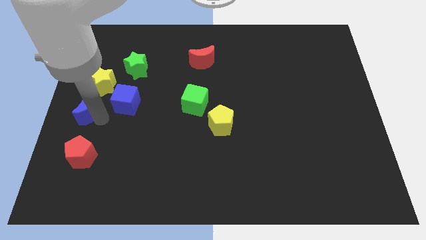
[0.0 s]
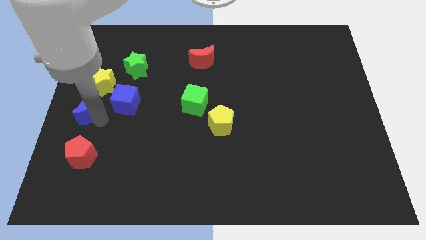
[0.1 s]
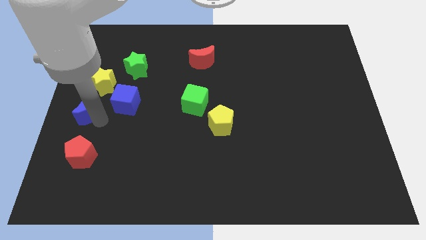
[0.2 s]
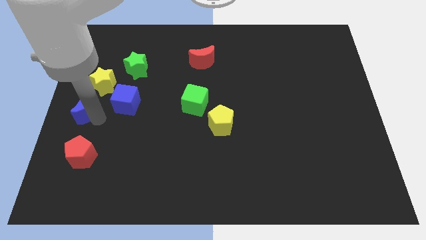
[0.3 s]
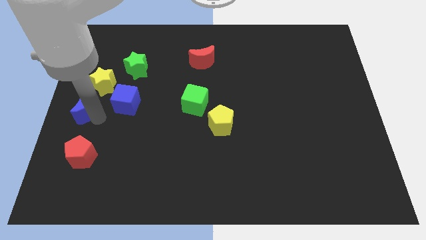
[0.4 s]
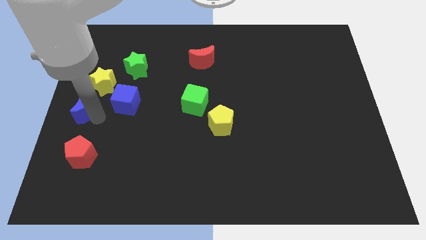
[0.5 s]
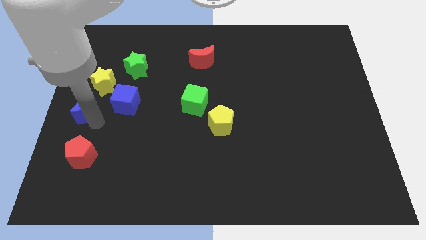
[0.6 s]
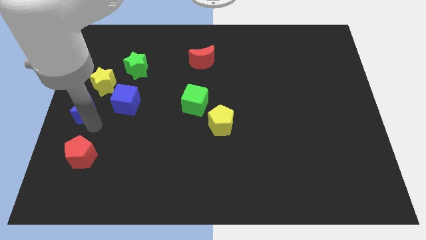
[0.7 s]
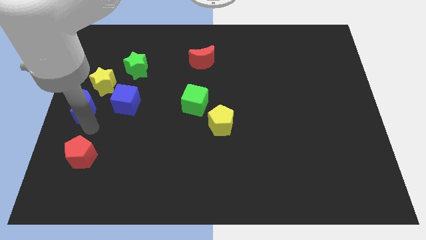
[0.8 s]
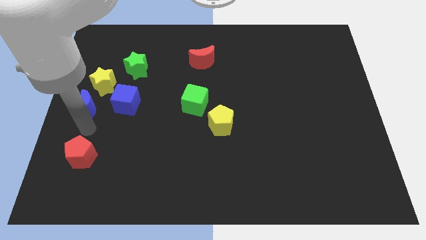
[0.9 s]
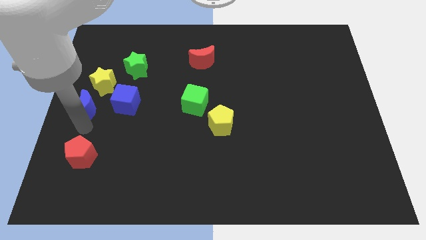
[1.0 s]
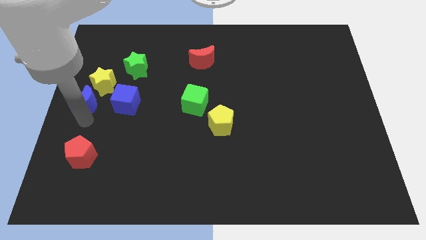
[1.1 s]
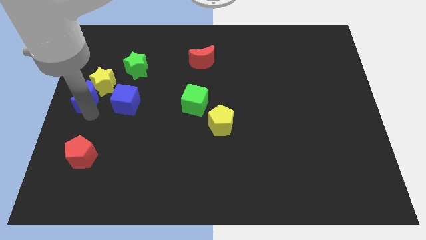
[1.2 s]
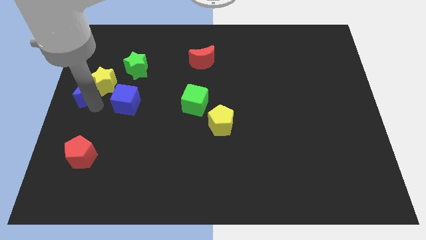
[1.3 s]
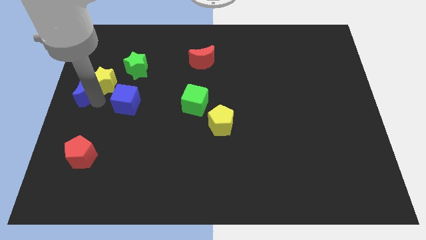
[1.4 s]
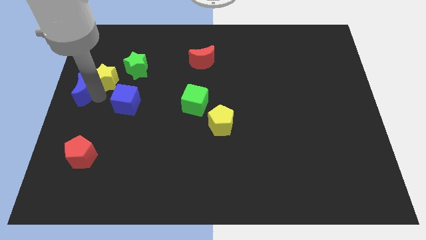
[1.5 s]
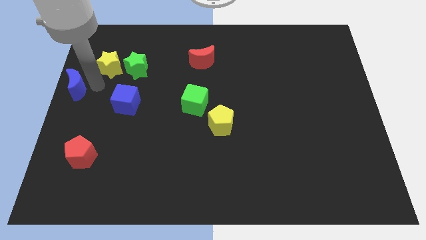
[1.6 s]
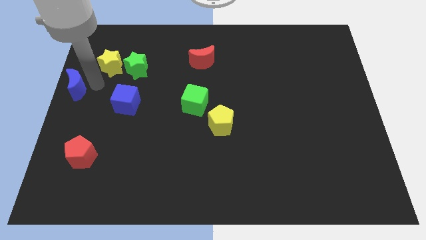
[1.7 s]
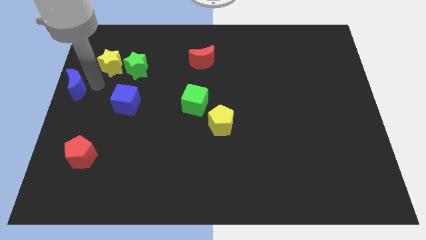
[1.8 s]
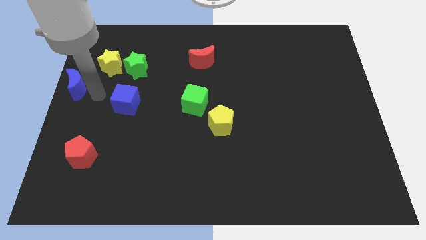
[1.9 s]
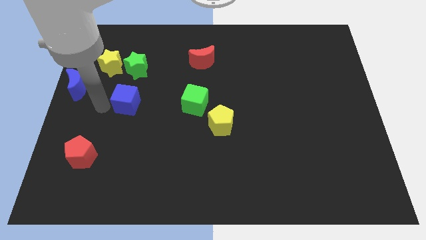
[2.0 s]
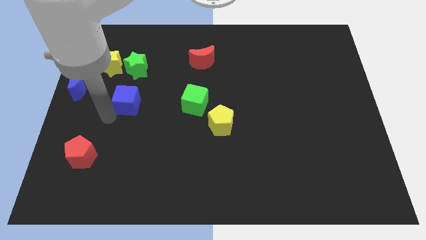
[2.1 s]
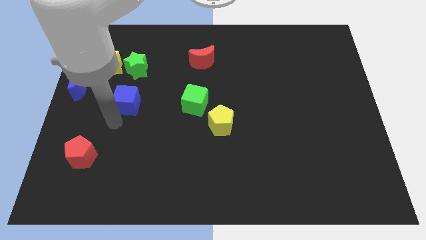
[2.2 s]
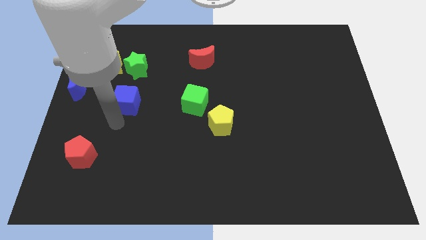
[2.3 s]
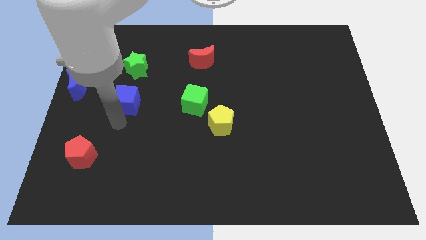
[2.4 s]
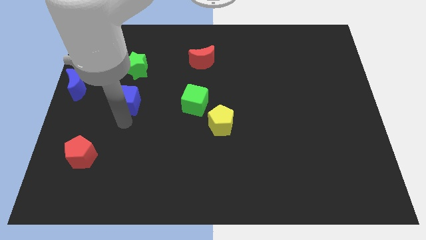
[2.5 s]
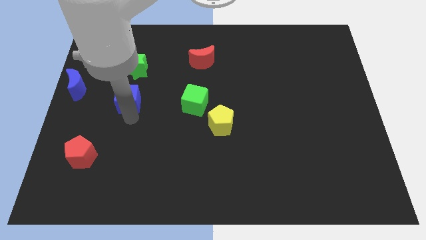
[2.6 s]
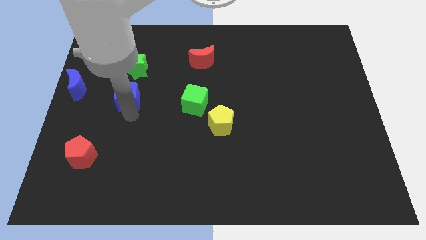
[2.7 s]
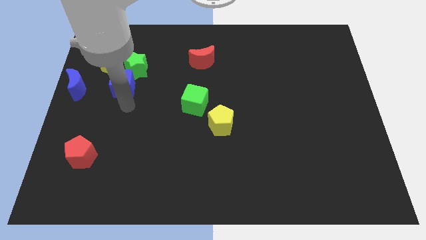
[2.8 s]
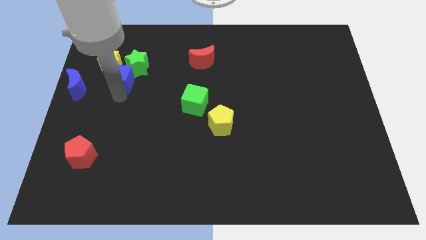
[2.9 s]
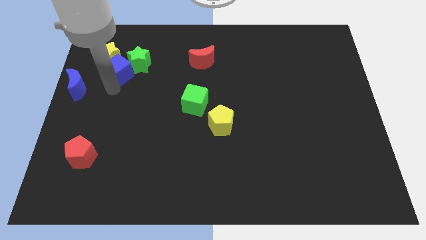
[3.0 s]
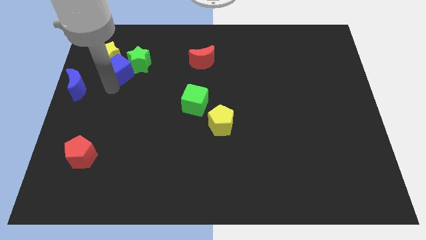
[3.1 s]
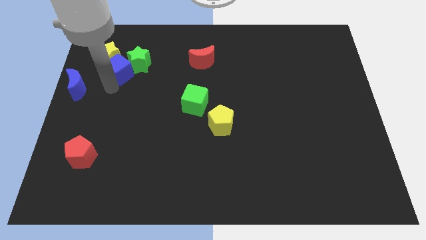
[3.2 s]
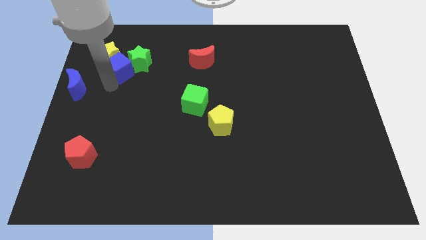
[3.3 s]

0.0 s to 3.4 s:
push the blue cube into the yellow star

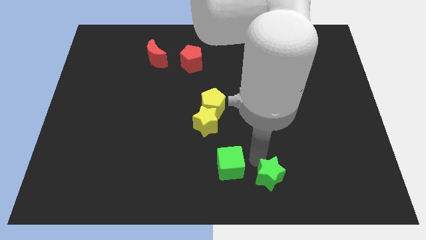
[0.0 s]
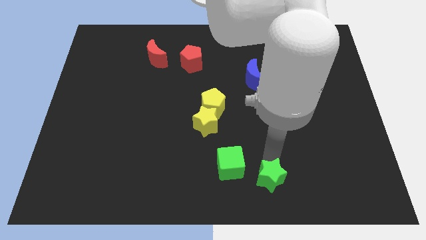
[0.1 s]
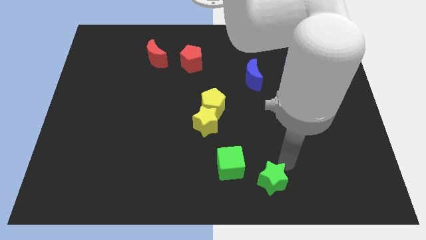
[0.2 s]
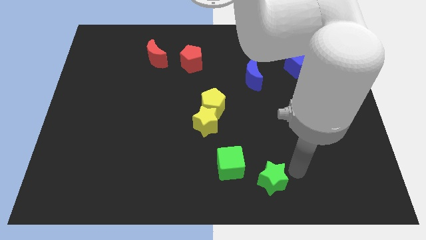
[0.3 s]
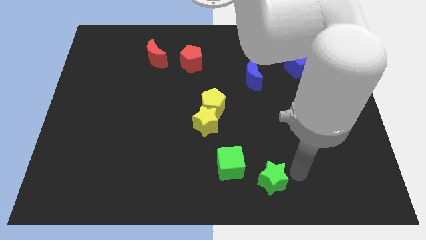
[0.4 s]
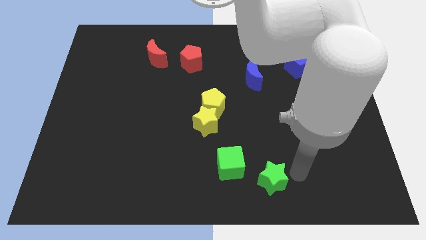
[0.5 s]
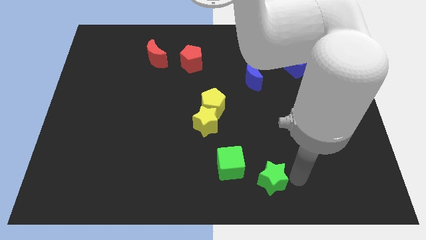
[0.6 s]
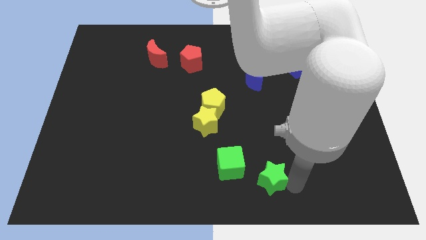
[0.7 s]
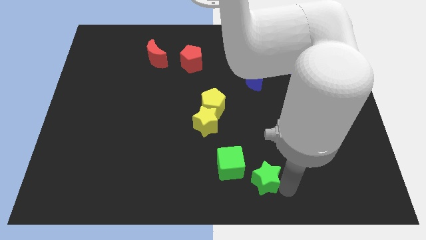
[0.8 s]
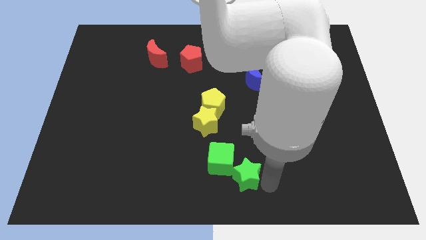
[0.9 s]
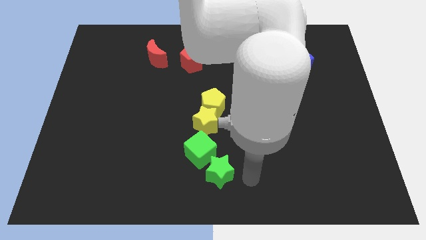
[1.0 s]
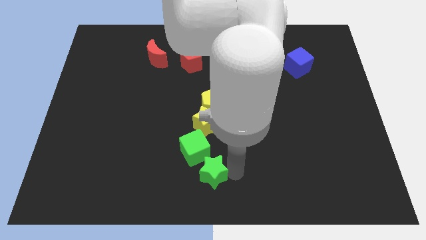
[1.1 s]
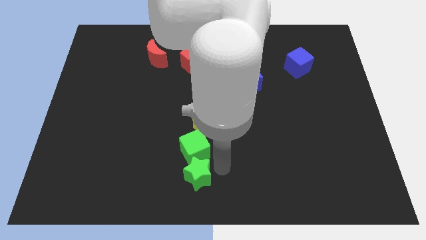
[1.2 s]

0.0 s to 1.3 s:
push green star into the green cube

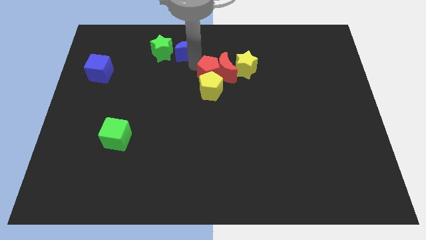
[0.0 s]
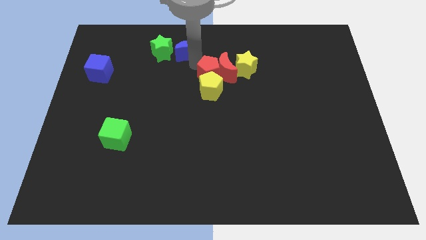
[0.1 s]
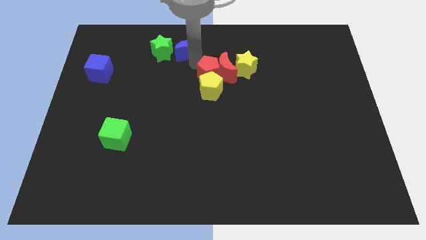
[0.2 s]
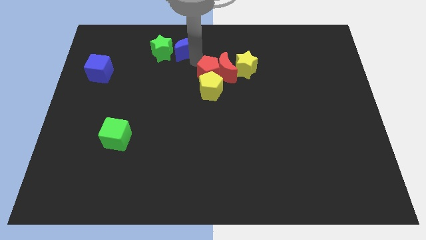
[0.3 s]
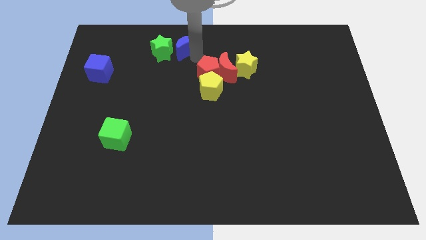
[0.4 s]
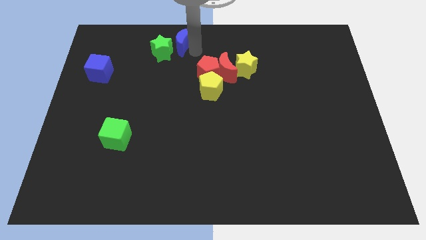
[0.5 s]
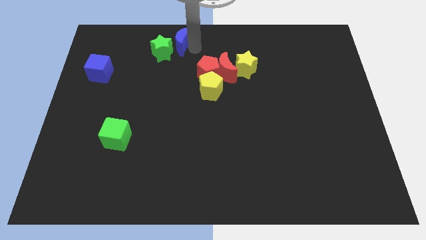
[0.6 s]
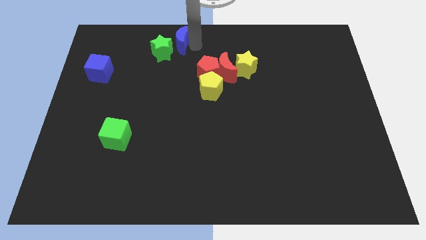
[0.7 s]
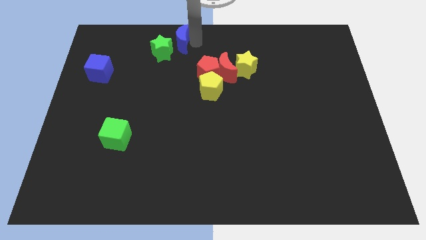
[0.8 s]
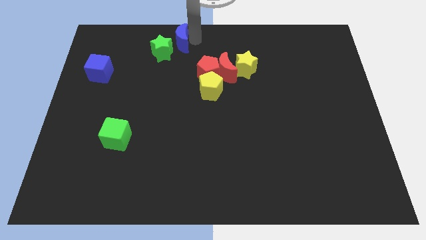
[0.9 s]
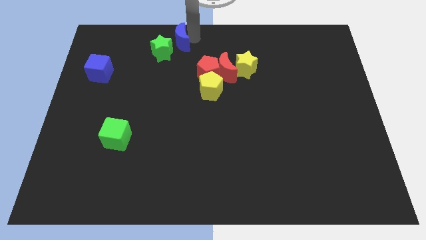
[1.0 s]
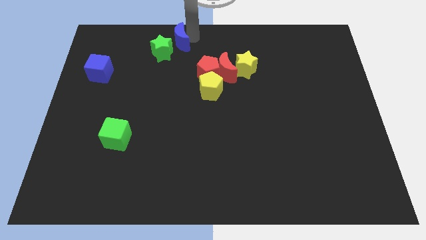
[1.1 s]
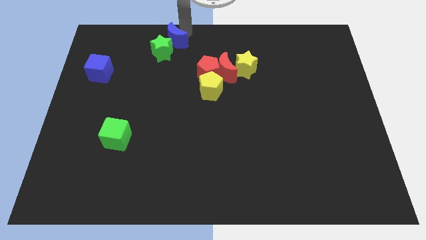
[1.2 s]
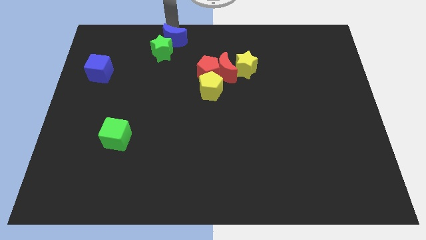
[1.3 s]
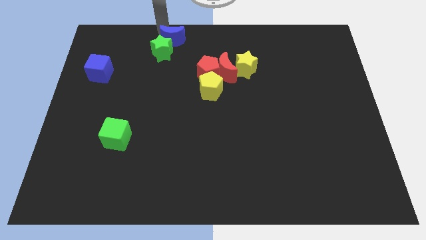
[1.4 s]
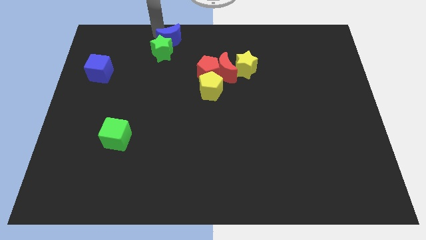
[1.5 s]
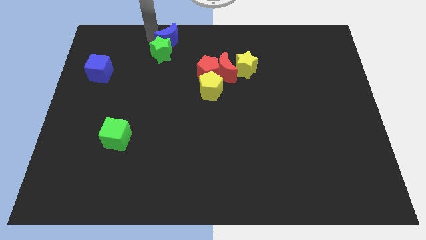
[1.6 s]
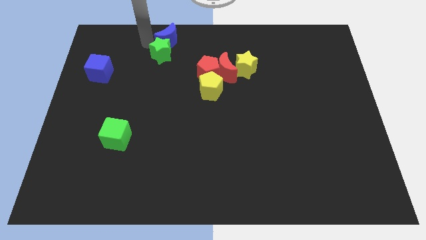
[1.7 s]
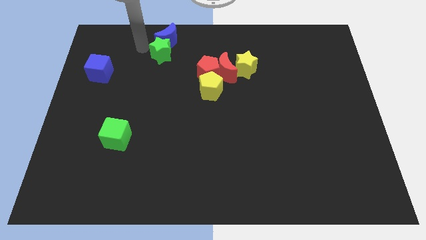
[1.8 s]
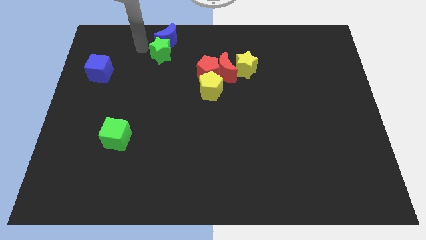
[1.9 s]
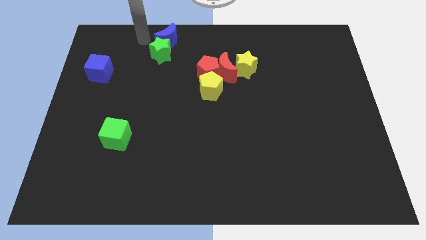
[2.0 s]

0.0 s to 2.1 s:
place the blue crescent above the green star

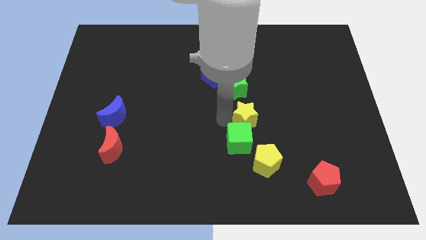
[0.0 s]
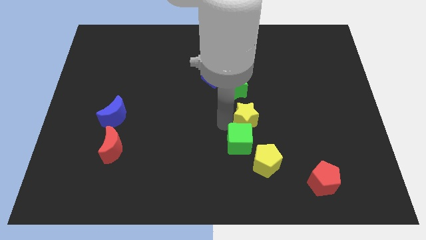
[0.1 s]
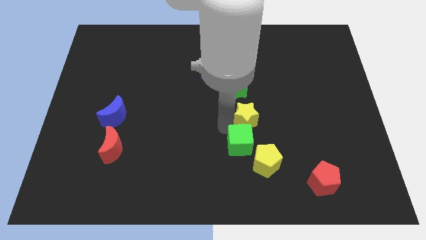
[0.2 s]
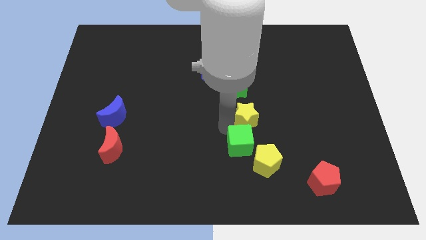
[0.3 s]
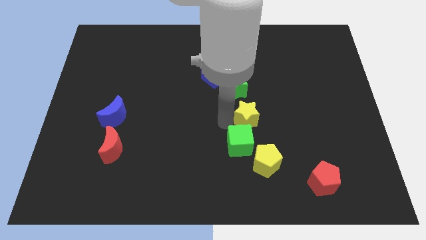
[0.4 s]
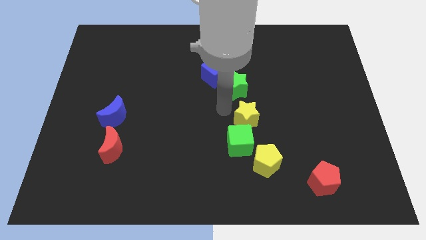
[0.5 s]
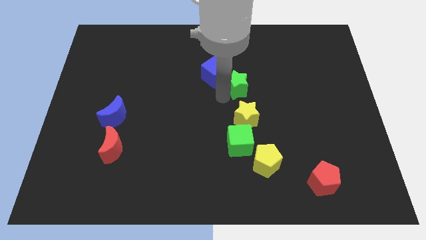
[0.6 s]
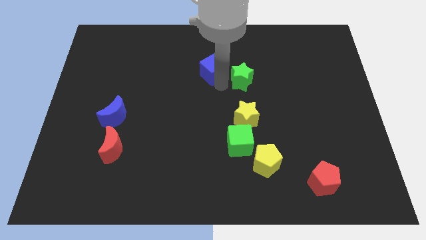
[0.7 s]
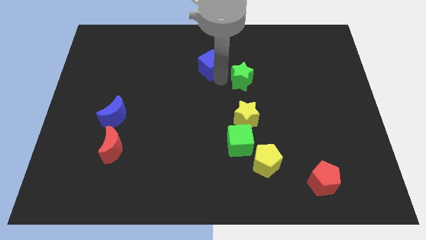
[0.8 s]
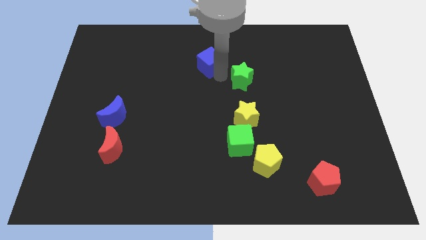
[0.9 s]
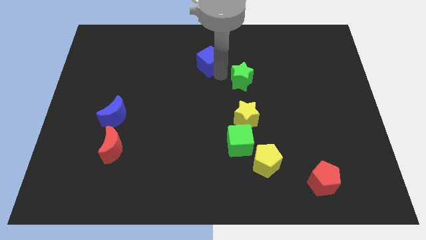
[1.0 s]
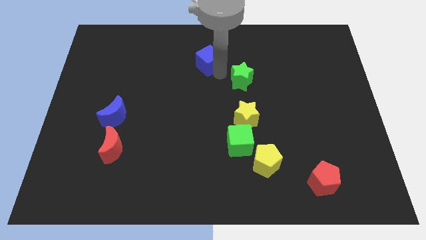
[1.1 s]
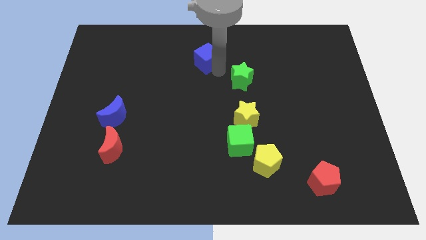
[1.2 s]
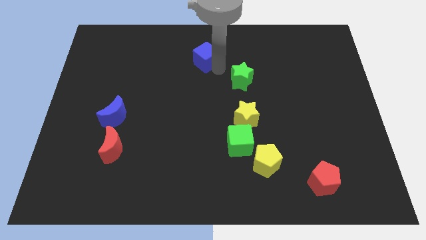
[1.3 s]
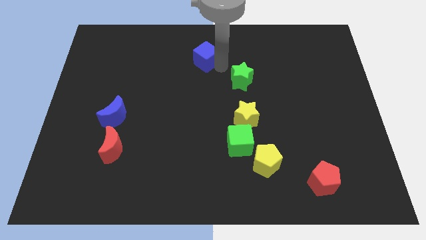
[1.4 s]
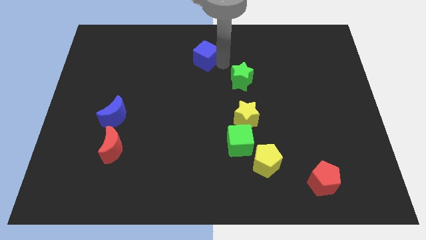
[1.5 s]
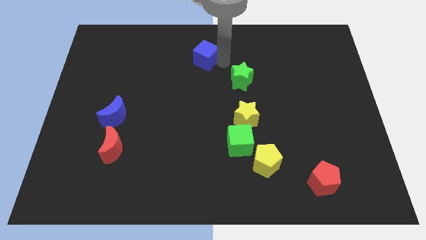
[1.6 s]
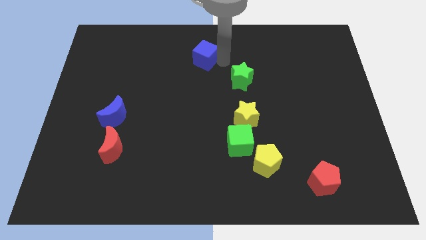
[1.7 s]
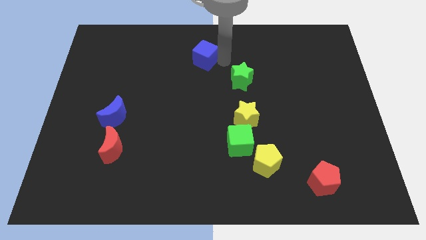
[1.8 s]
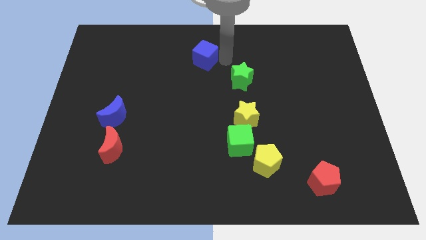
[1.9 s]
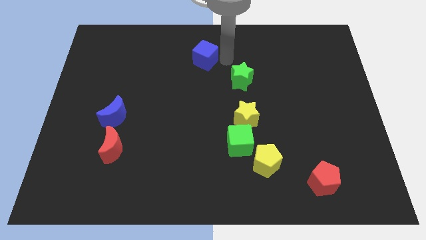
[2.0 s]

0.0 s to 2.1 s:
separate blue cube and green star
